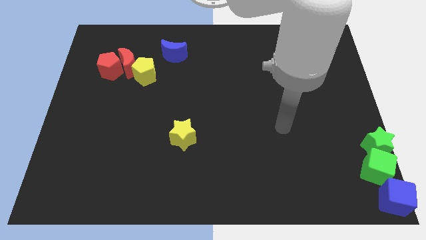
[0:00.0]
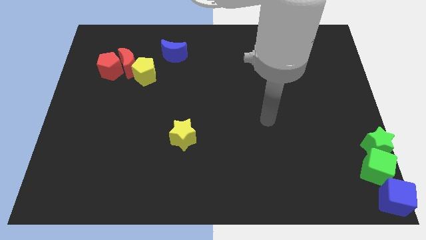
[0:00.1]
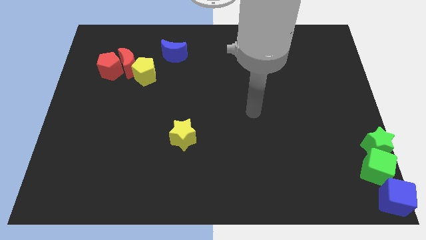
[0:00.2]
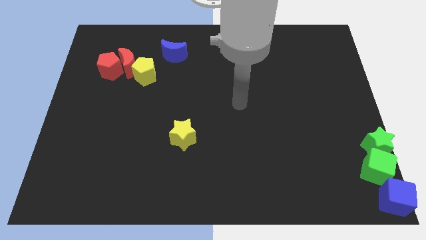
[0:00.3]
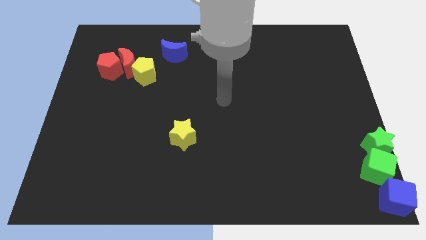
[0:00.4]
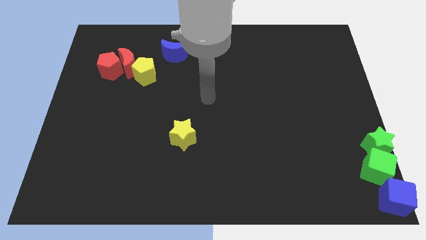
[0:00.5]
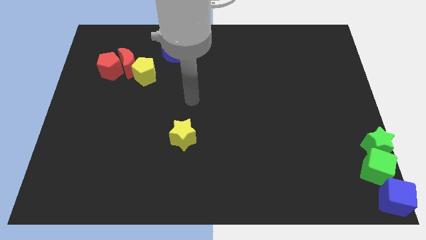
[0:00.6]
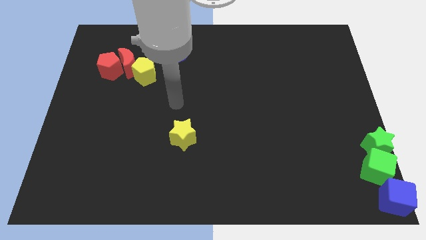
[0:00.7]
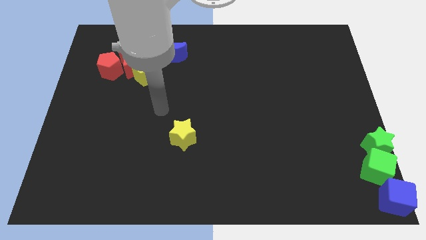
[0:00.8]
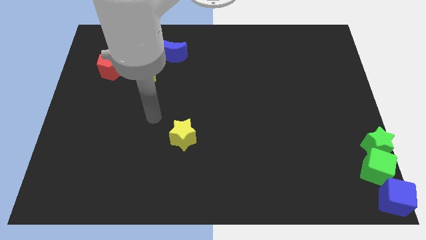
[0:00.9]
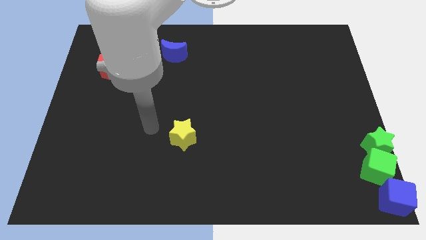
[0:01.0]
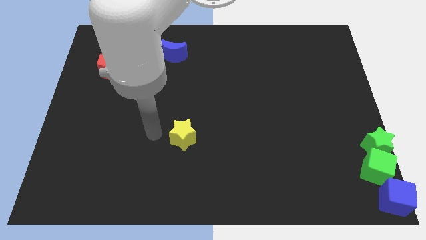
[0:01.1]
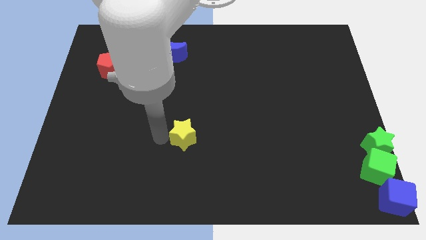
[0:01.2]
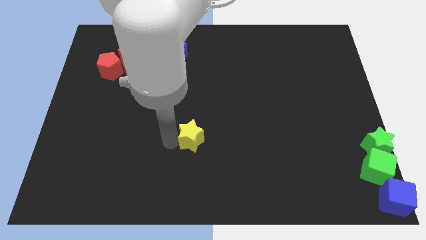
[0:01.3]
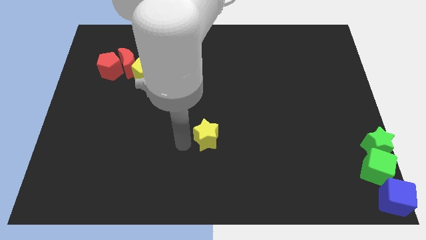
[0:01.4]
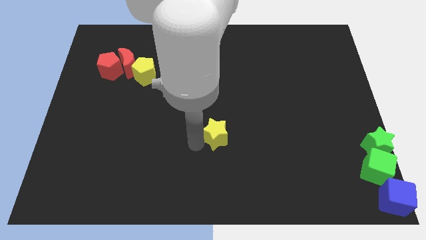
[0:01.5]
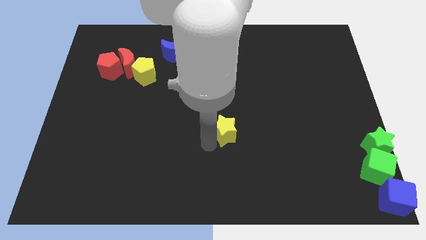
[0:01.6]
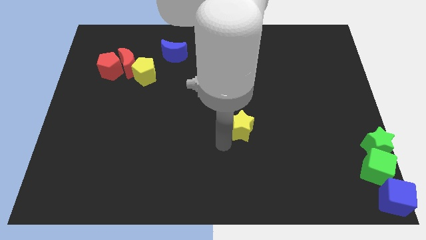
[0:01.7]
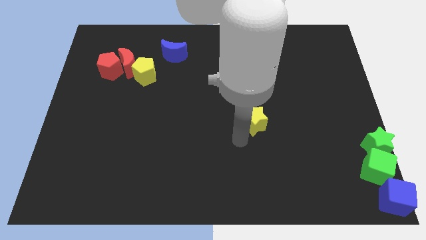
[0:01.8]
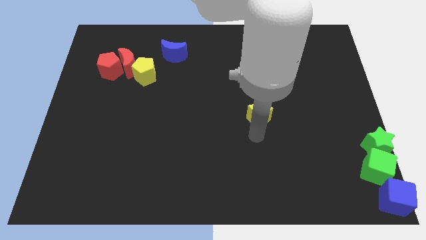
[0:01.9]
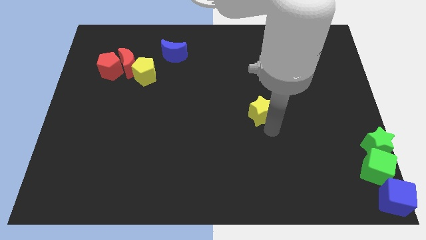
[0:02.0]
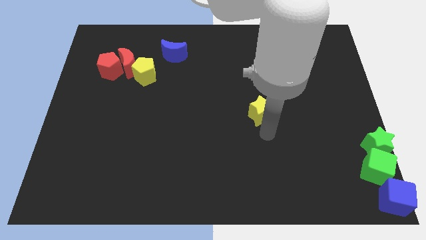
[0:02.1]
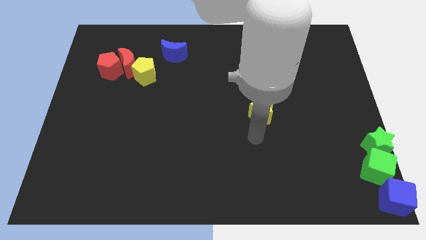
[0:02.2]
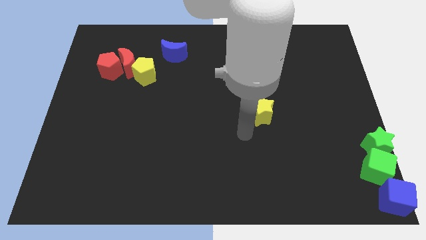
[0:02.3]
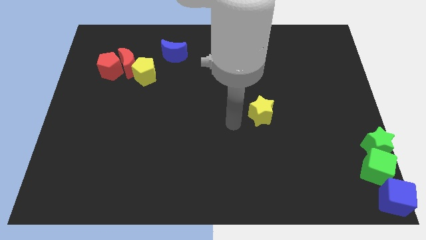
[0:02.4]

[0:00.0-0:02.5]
place the yellow star diagonally bottom right to the blue moon

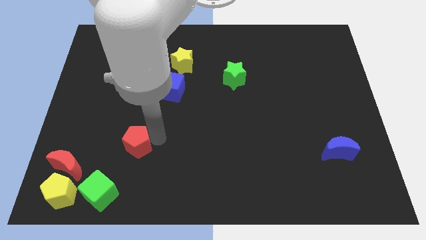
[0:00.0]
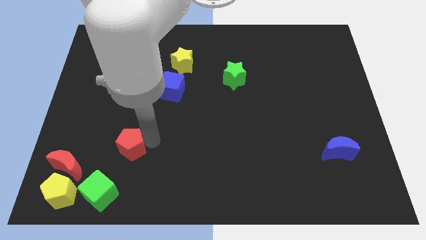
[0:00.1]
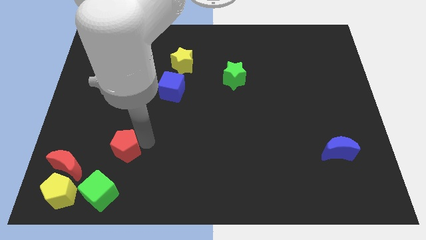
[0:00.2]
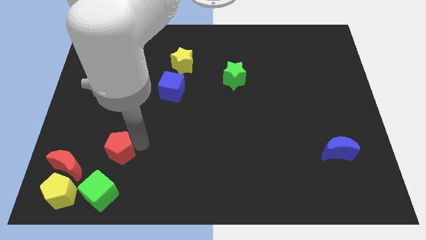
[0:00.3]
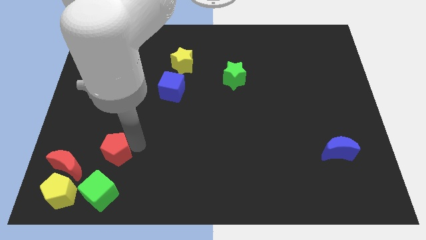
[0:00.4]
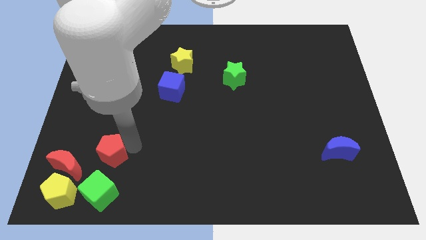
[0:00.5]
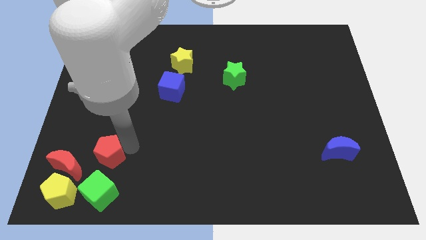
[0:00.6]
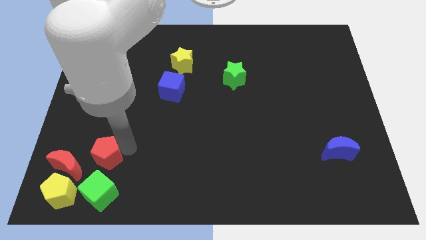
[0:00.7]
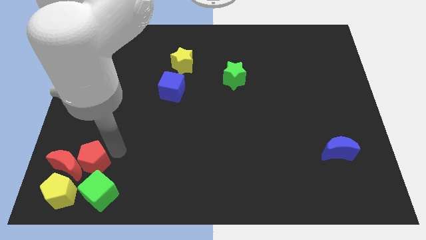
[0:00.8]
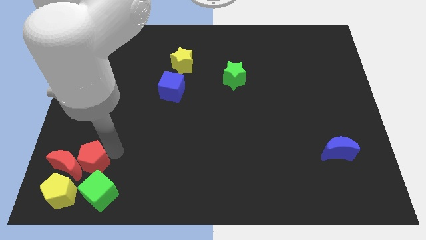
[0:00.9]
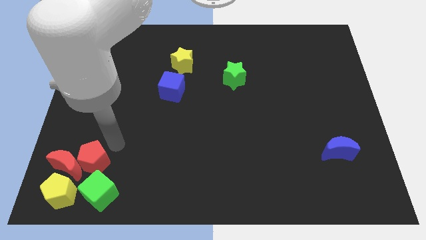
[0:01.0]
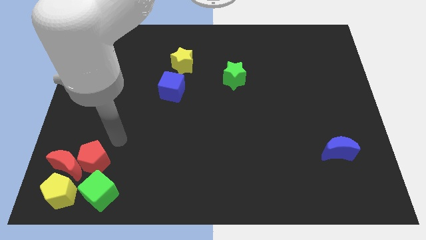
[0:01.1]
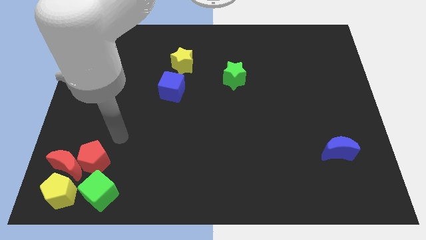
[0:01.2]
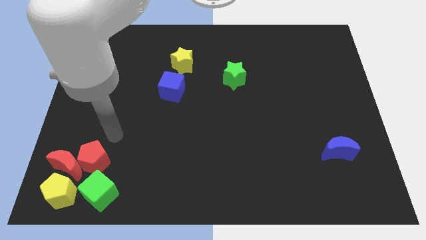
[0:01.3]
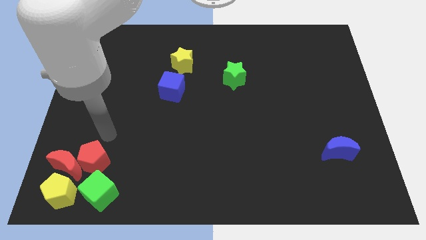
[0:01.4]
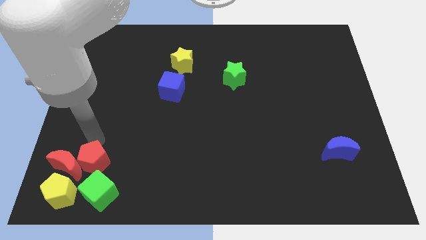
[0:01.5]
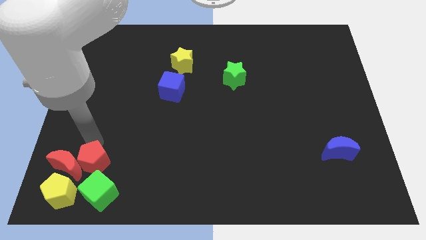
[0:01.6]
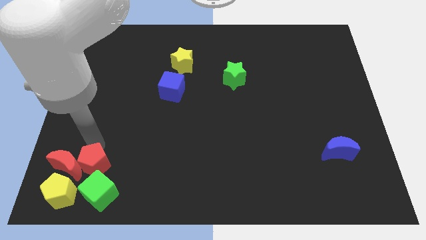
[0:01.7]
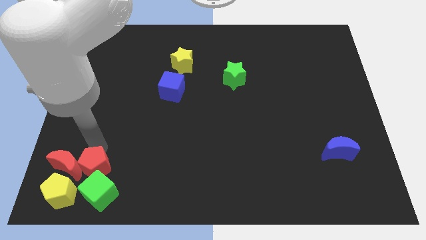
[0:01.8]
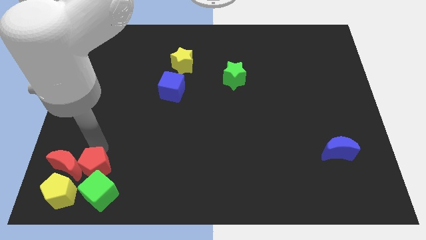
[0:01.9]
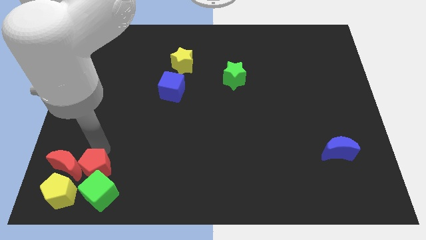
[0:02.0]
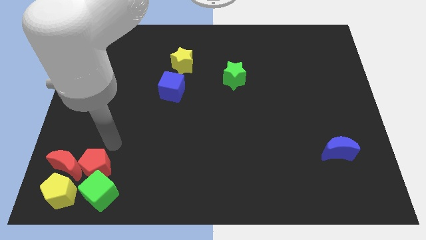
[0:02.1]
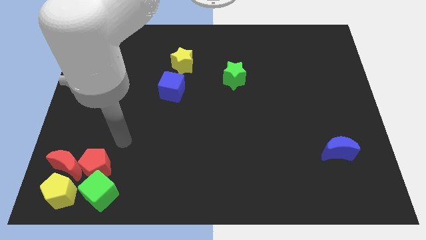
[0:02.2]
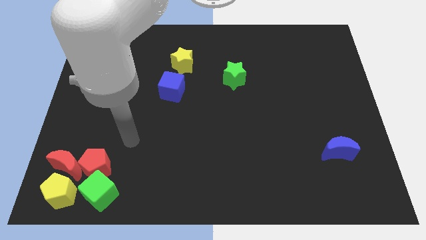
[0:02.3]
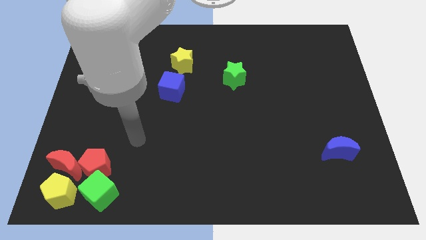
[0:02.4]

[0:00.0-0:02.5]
place the red pentagon on top of green cube

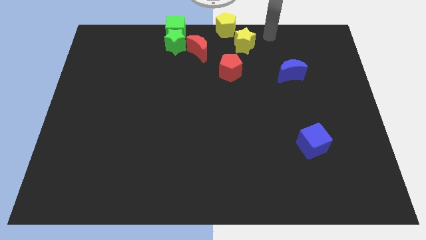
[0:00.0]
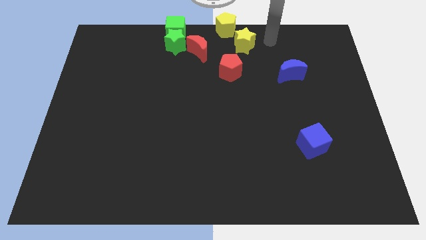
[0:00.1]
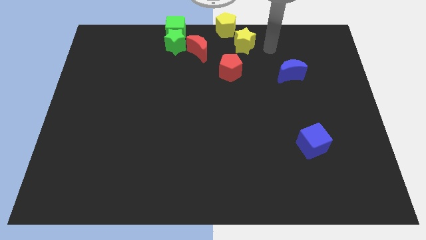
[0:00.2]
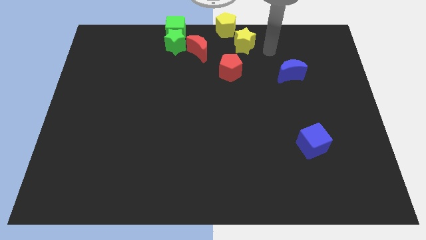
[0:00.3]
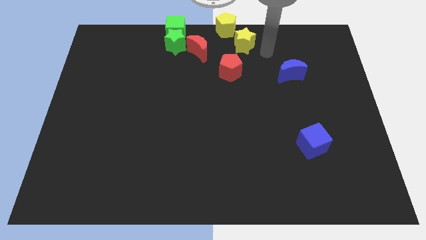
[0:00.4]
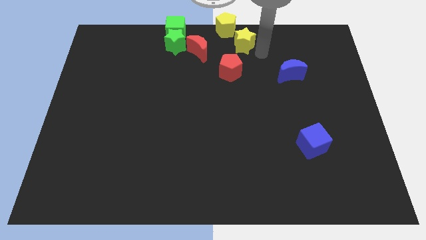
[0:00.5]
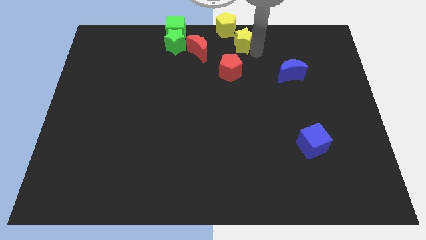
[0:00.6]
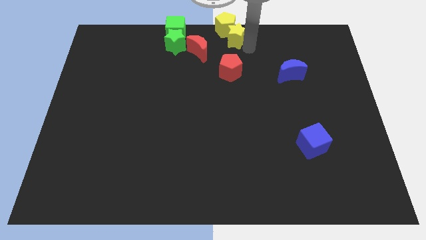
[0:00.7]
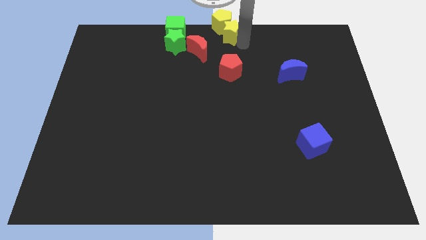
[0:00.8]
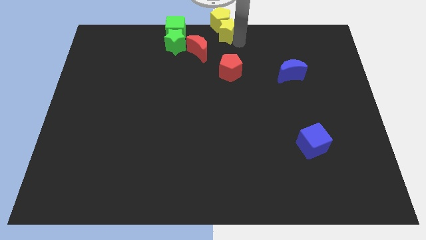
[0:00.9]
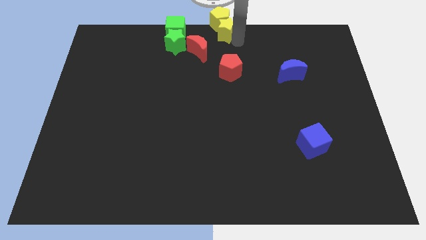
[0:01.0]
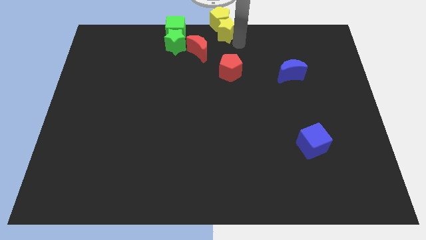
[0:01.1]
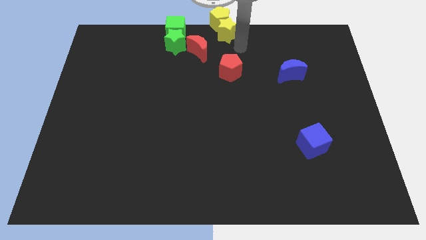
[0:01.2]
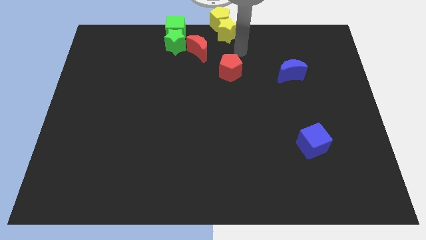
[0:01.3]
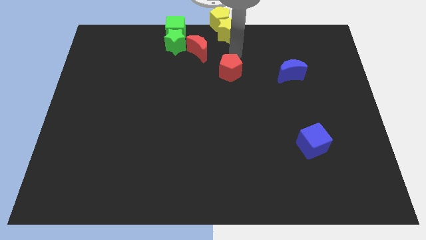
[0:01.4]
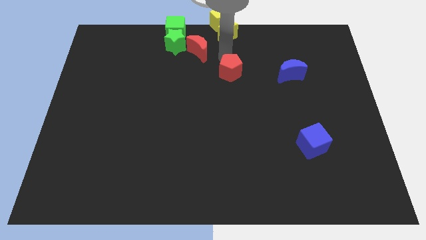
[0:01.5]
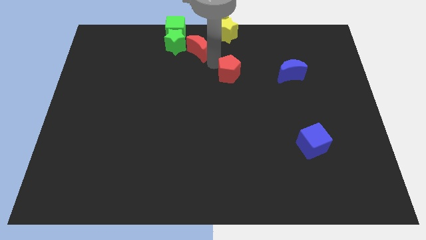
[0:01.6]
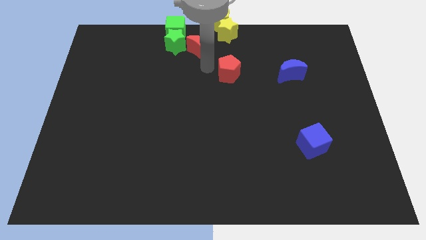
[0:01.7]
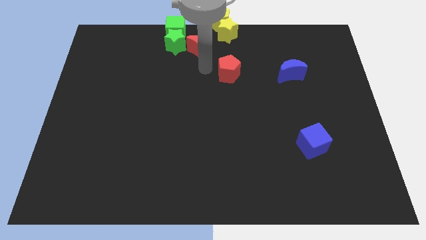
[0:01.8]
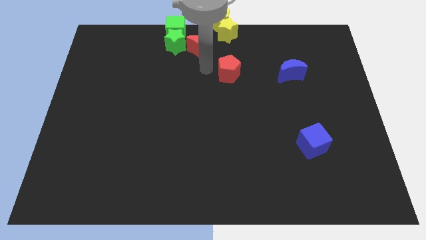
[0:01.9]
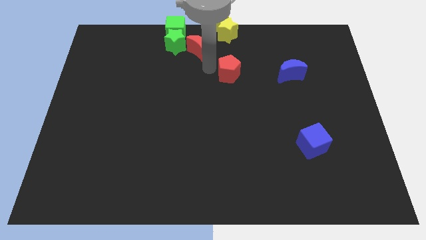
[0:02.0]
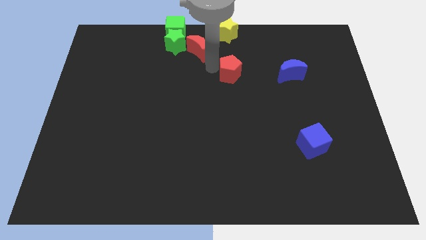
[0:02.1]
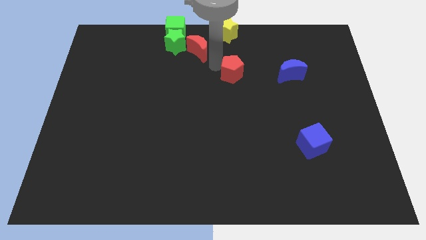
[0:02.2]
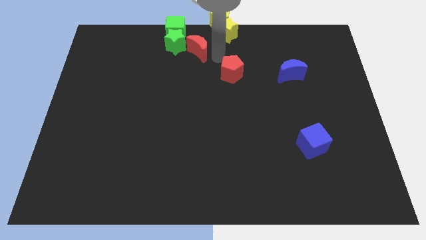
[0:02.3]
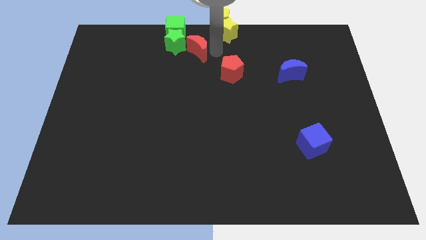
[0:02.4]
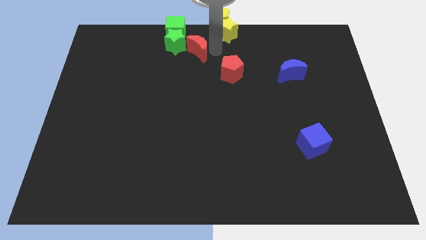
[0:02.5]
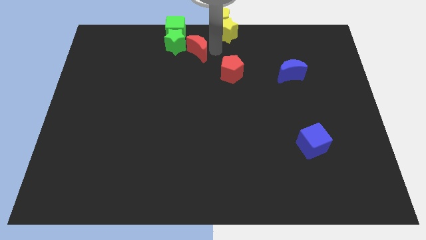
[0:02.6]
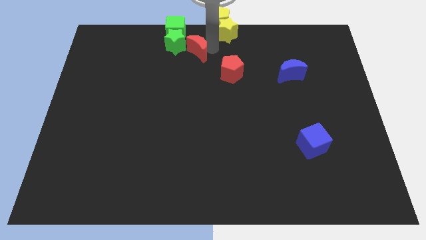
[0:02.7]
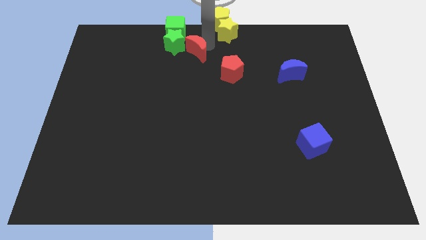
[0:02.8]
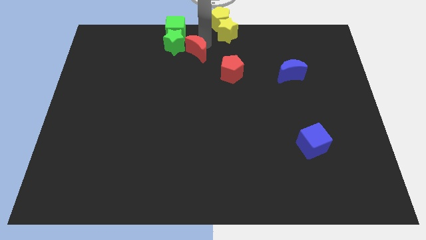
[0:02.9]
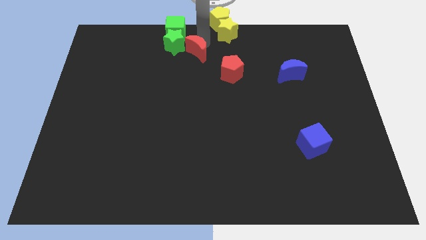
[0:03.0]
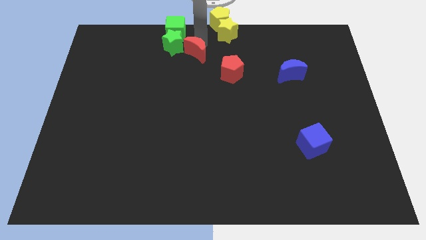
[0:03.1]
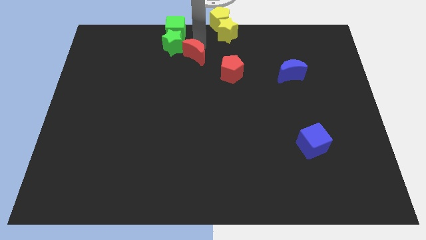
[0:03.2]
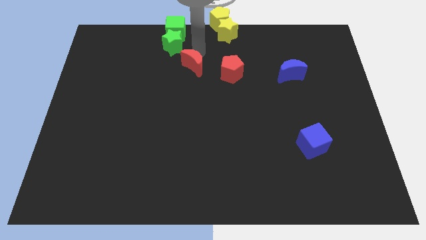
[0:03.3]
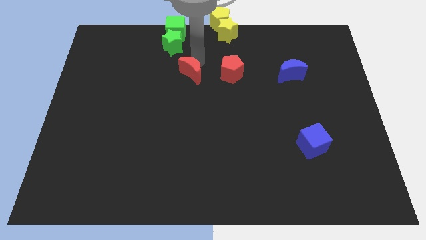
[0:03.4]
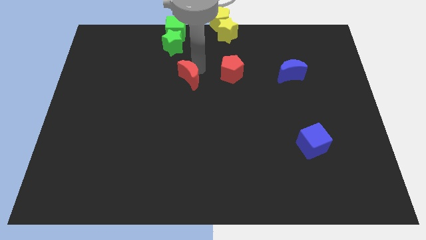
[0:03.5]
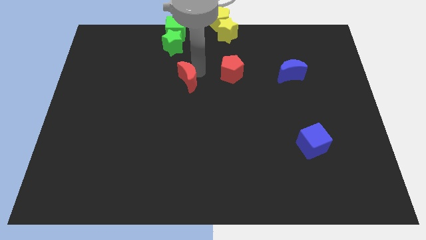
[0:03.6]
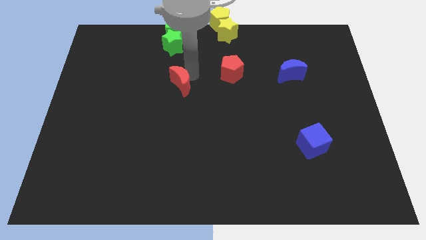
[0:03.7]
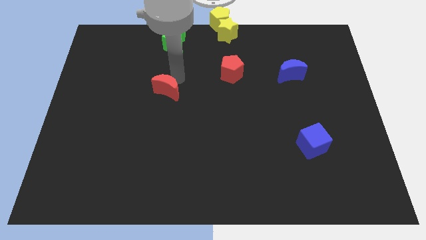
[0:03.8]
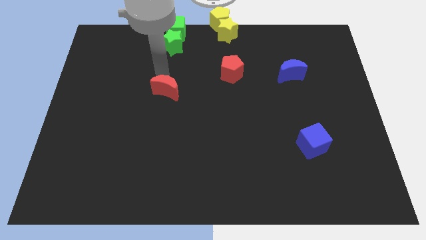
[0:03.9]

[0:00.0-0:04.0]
move red moon to the bottom left of red pentagon
